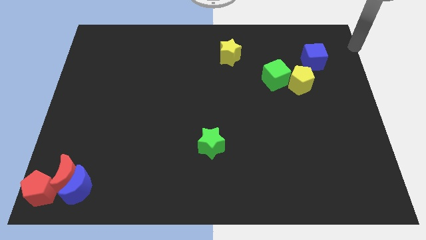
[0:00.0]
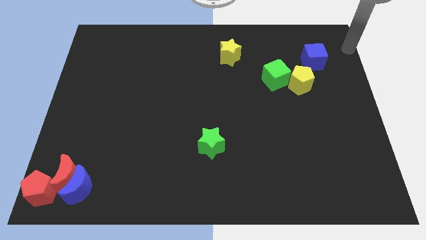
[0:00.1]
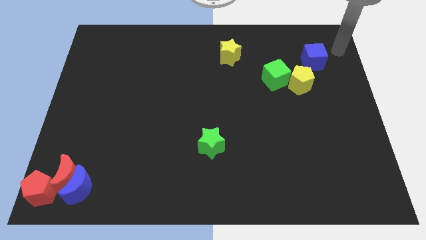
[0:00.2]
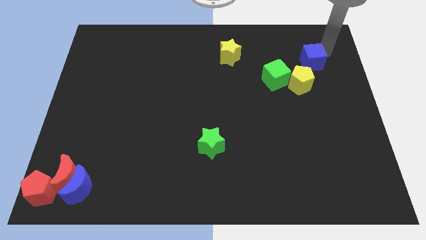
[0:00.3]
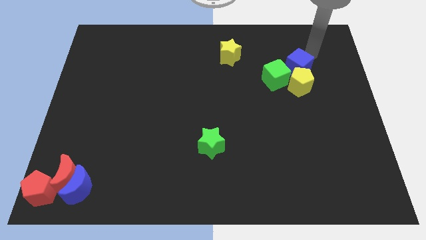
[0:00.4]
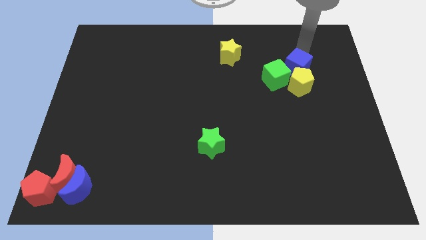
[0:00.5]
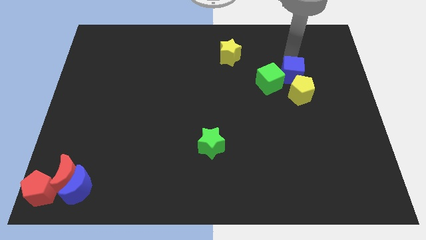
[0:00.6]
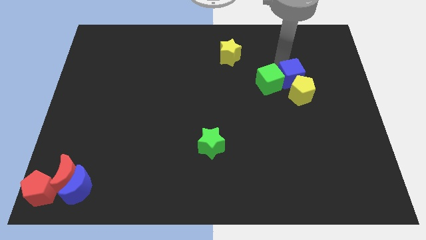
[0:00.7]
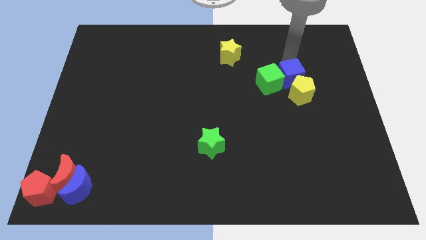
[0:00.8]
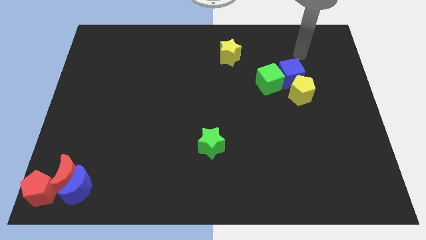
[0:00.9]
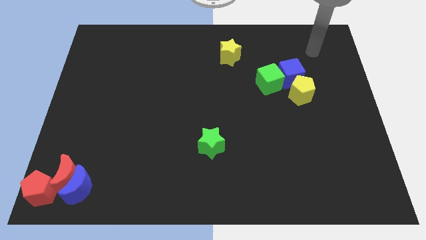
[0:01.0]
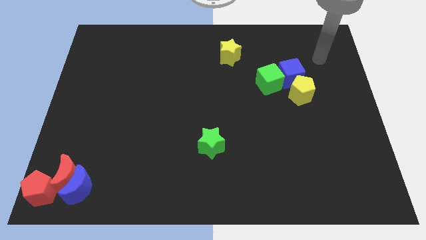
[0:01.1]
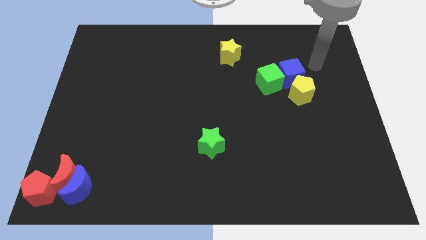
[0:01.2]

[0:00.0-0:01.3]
move blue cube into the green cube and yellow pentagon

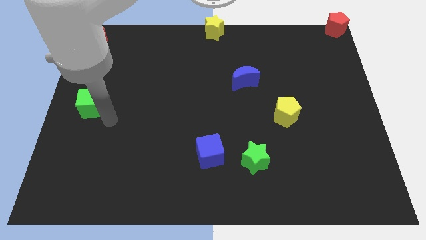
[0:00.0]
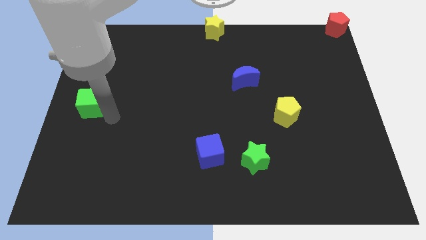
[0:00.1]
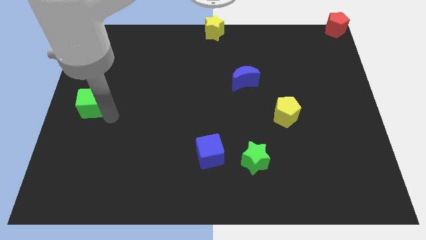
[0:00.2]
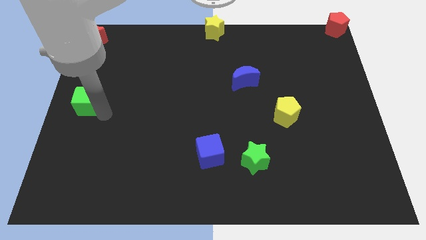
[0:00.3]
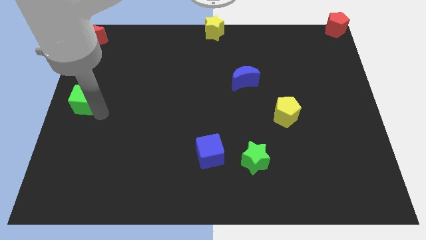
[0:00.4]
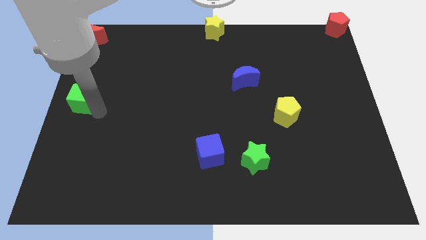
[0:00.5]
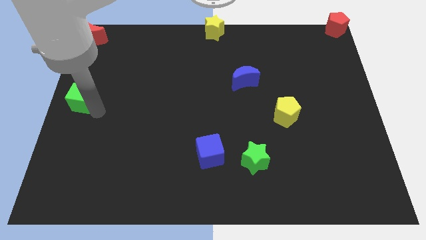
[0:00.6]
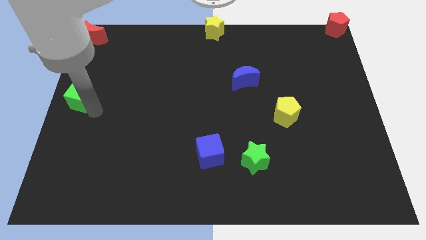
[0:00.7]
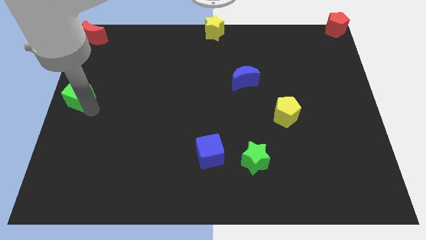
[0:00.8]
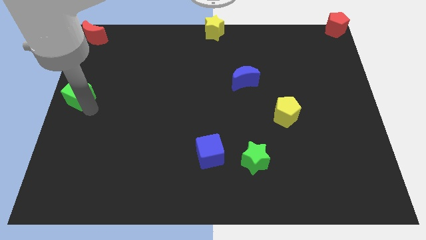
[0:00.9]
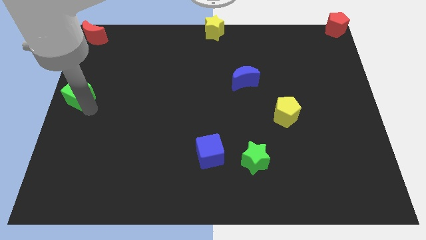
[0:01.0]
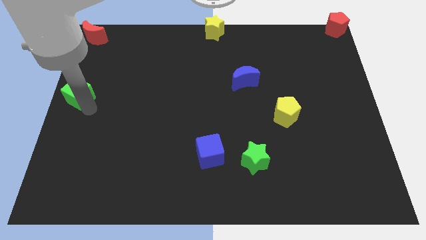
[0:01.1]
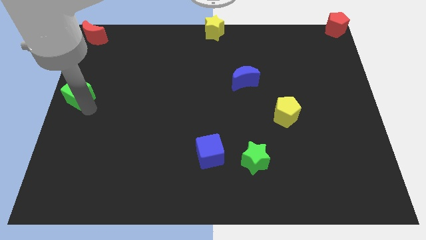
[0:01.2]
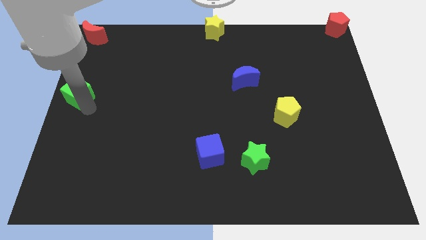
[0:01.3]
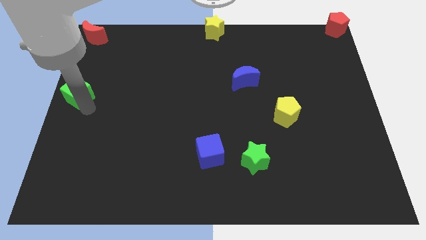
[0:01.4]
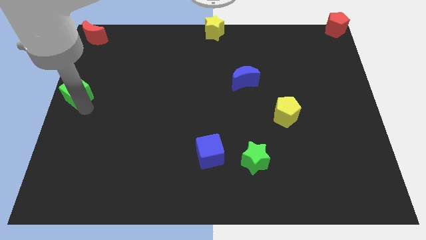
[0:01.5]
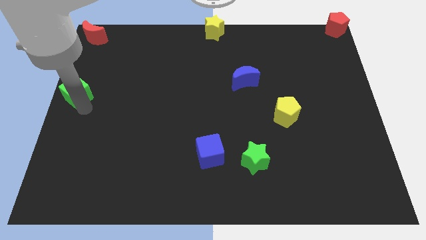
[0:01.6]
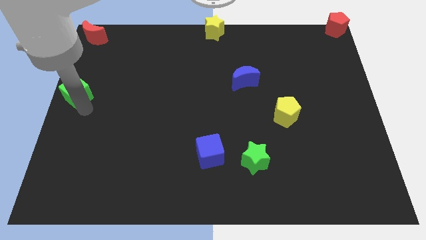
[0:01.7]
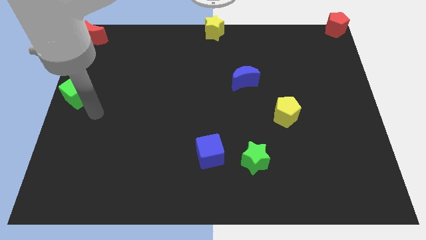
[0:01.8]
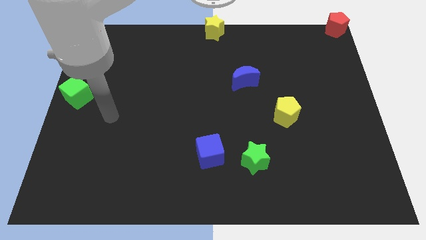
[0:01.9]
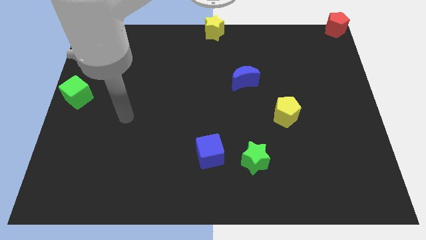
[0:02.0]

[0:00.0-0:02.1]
place green cube in the center left

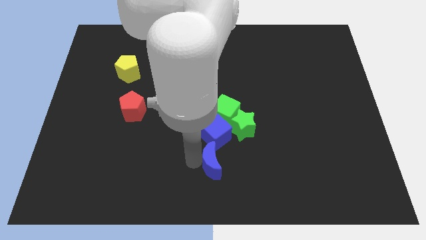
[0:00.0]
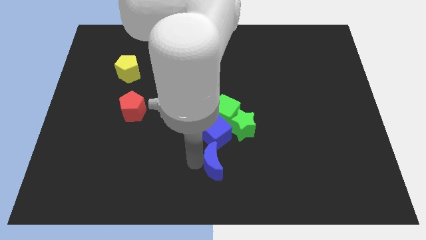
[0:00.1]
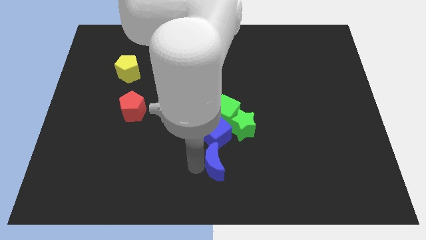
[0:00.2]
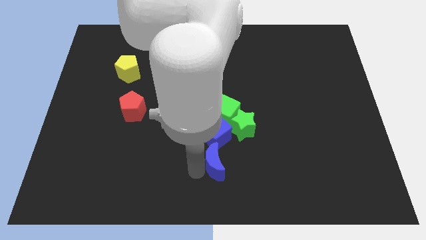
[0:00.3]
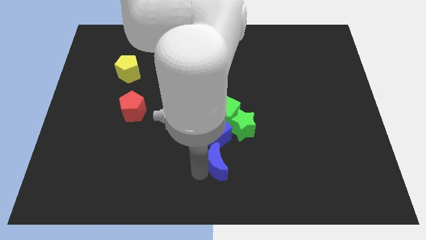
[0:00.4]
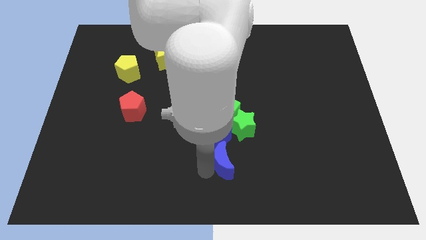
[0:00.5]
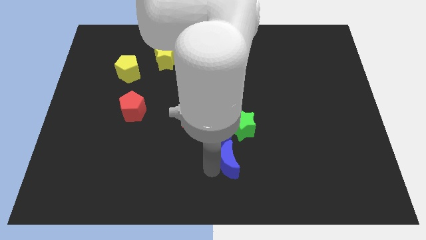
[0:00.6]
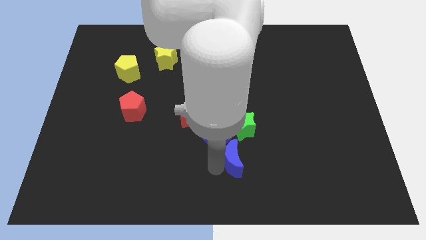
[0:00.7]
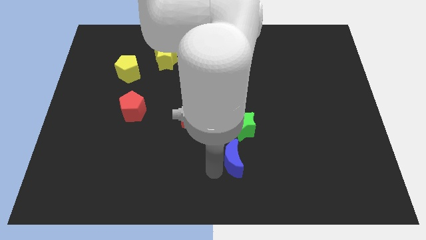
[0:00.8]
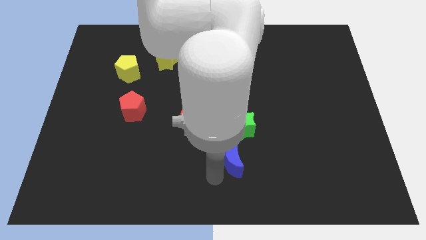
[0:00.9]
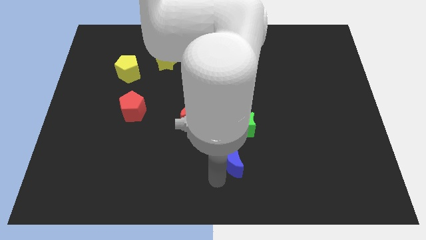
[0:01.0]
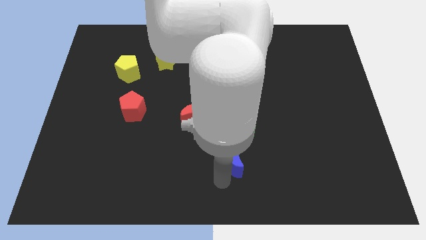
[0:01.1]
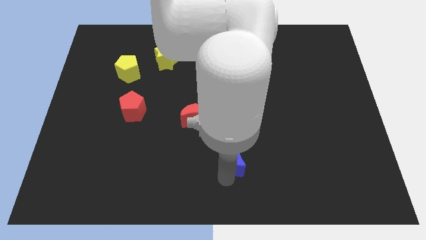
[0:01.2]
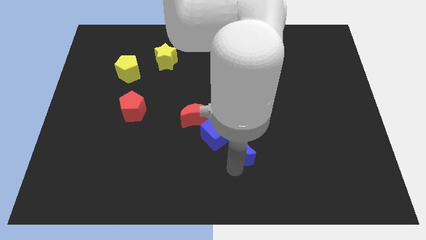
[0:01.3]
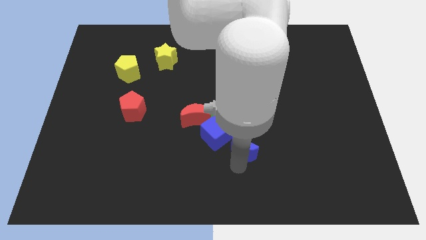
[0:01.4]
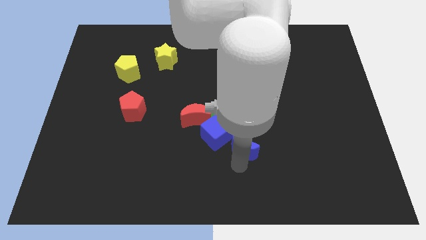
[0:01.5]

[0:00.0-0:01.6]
place the blue moon to the right side of the blue cube

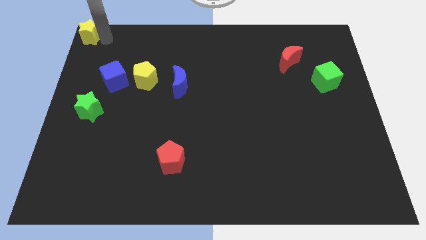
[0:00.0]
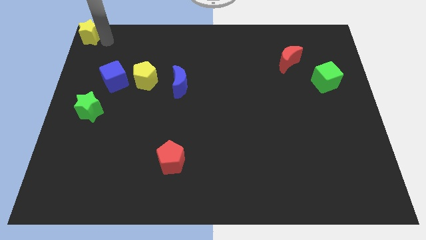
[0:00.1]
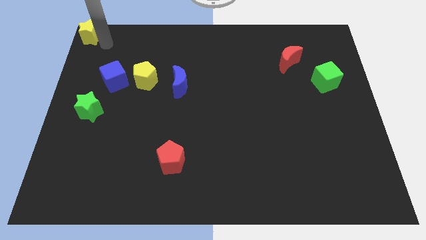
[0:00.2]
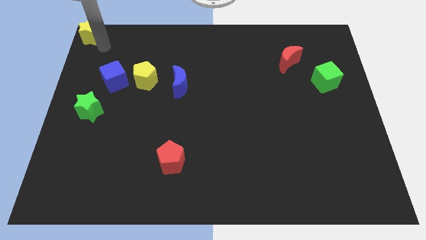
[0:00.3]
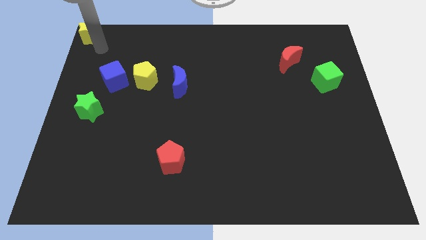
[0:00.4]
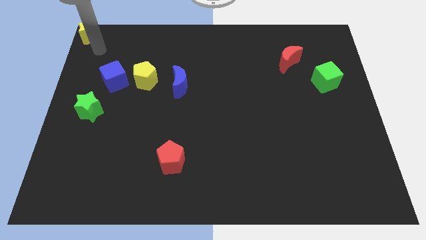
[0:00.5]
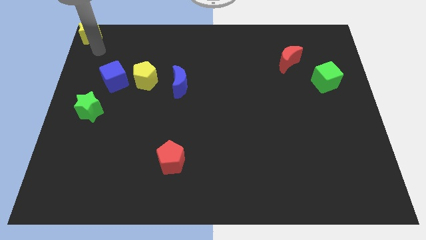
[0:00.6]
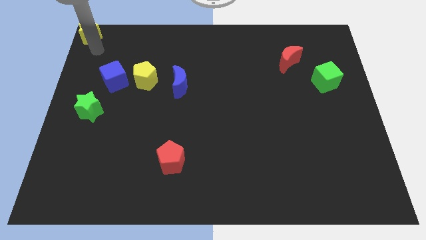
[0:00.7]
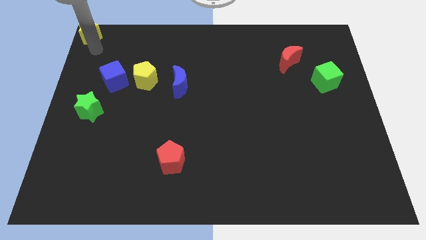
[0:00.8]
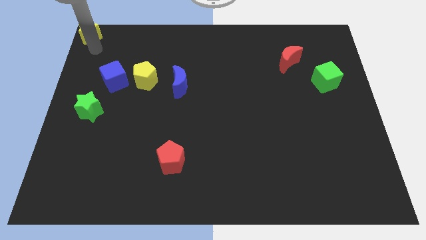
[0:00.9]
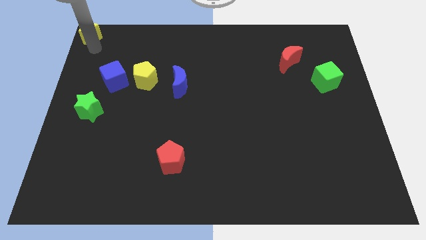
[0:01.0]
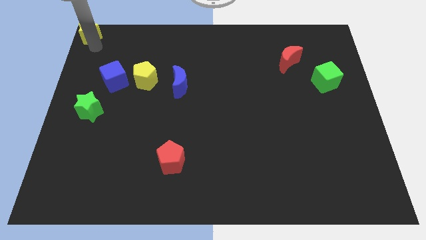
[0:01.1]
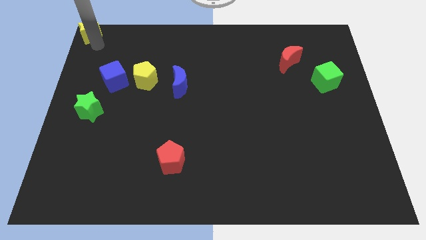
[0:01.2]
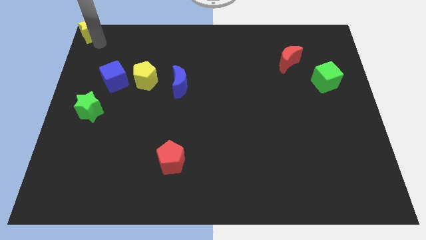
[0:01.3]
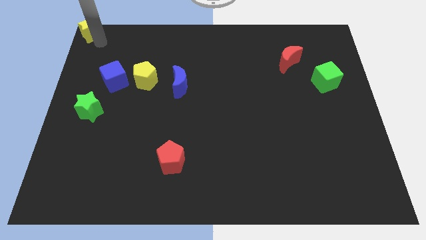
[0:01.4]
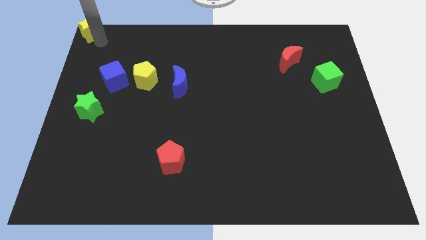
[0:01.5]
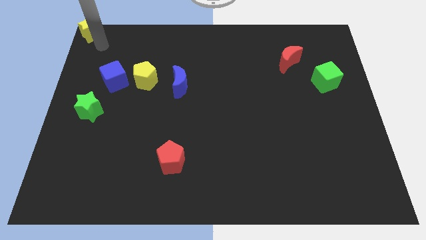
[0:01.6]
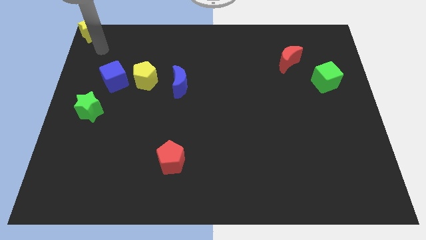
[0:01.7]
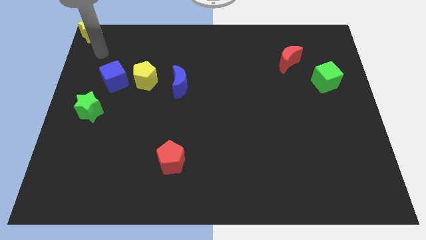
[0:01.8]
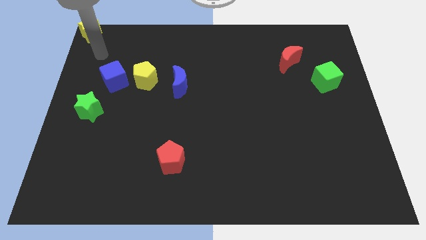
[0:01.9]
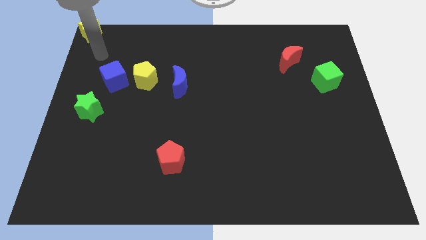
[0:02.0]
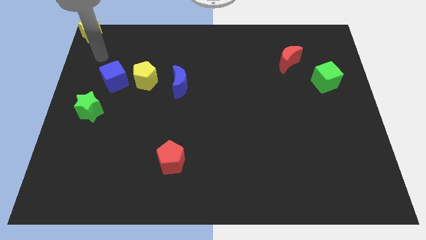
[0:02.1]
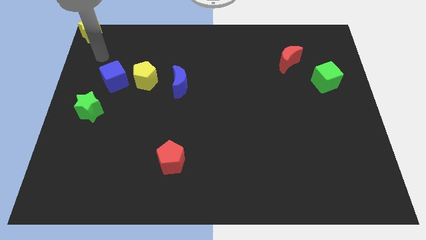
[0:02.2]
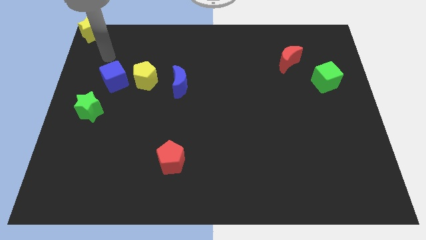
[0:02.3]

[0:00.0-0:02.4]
place the yellow star at the top left corner

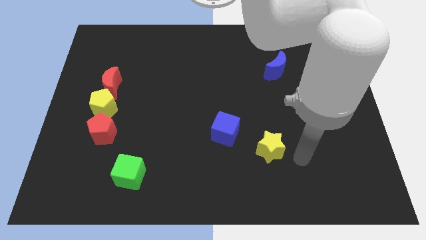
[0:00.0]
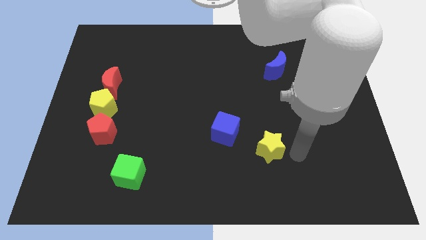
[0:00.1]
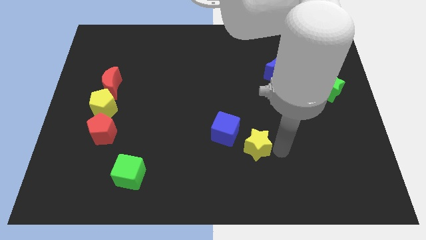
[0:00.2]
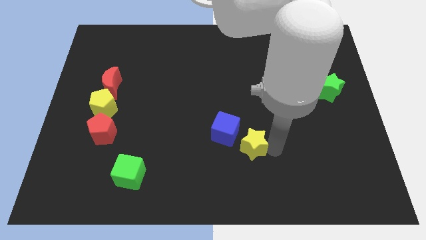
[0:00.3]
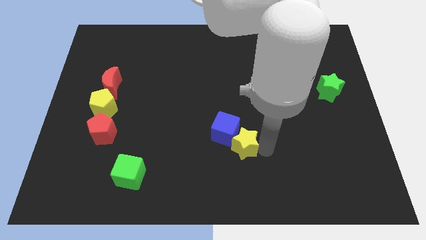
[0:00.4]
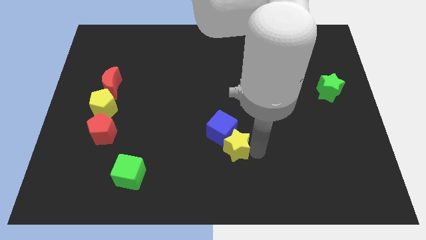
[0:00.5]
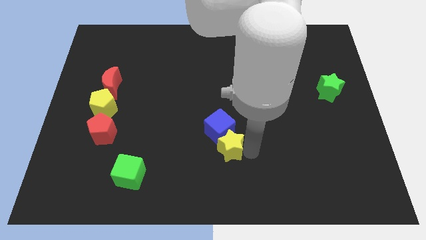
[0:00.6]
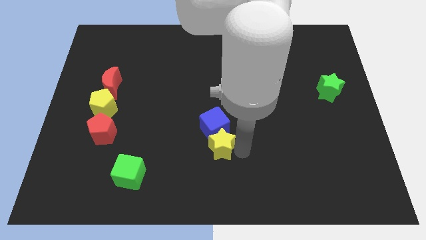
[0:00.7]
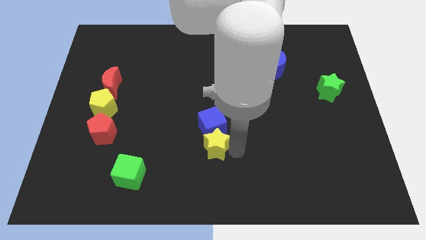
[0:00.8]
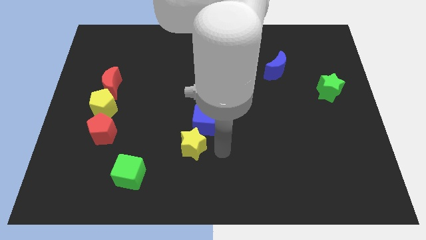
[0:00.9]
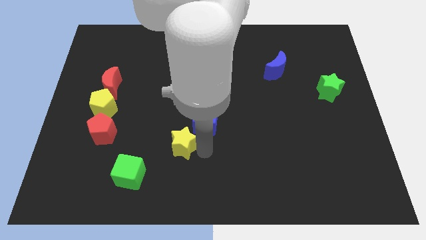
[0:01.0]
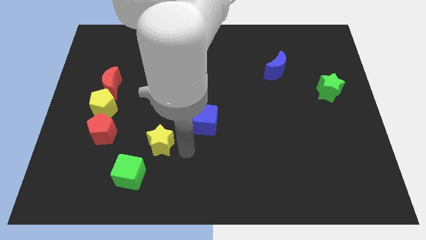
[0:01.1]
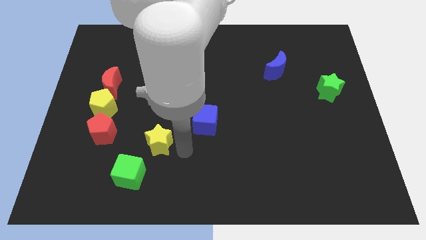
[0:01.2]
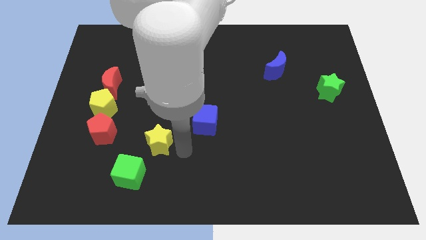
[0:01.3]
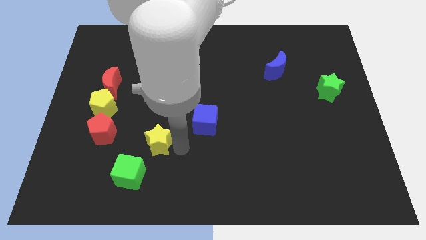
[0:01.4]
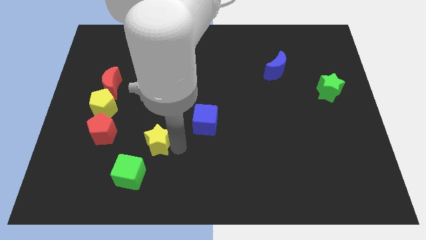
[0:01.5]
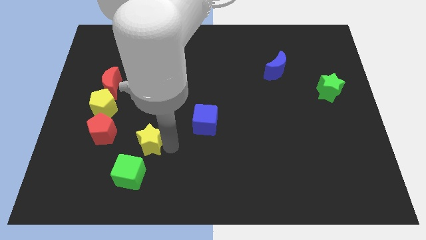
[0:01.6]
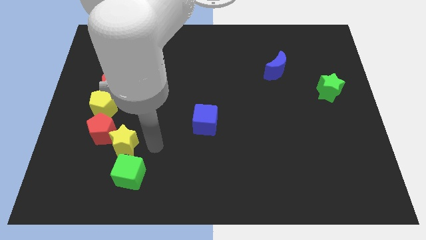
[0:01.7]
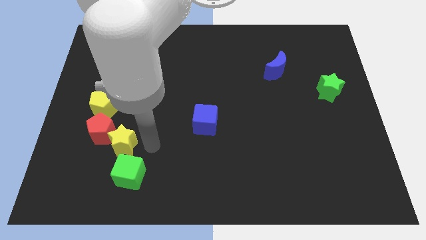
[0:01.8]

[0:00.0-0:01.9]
push the yellow star into the red pentagon
